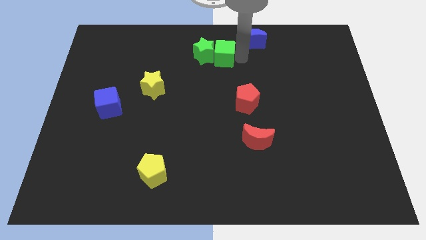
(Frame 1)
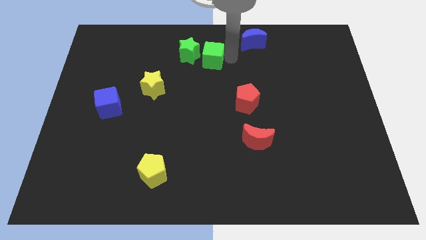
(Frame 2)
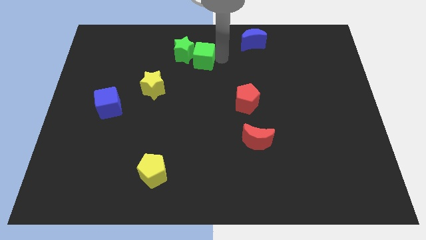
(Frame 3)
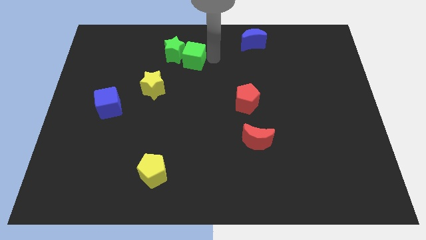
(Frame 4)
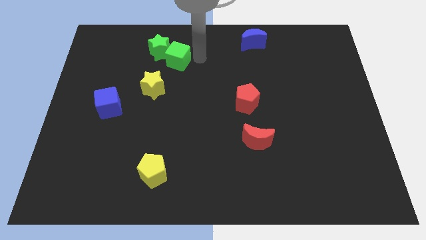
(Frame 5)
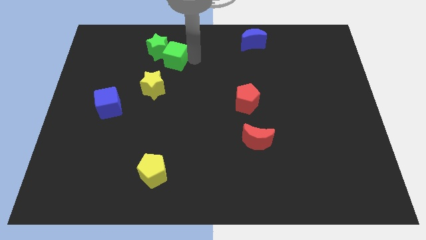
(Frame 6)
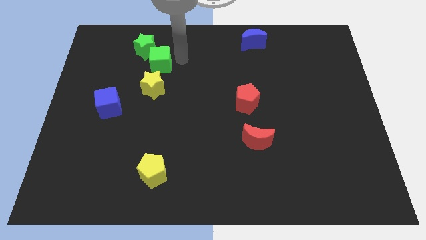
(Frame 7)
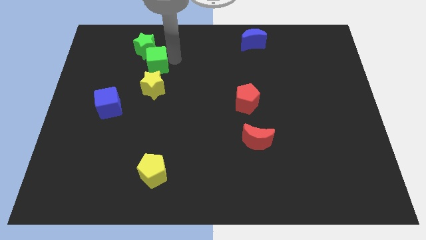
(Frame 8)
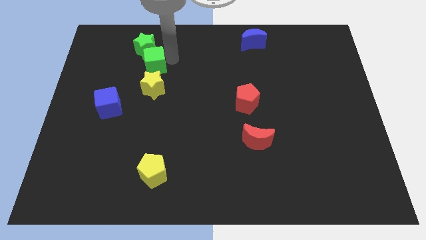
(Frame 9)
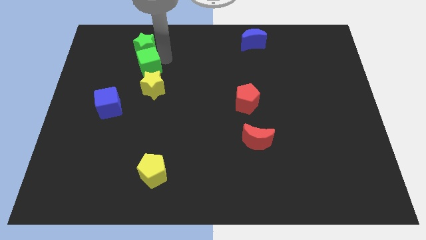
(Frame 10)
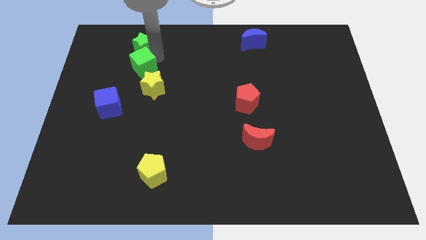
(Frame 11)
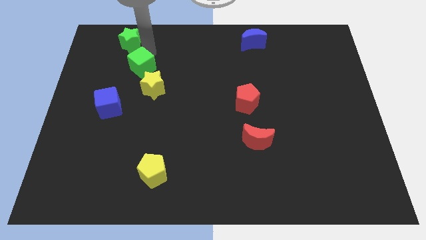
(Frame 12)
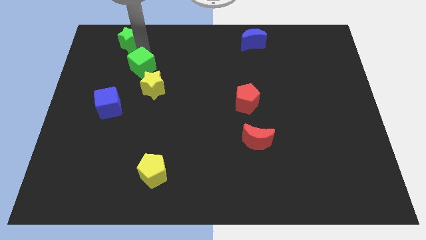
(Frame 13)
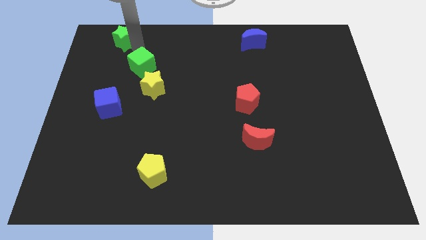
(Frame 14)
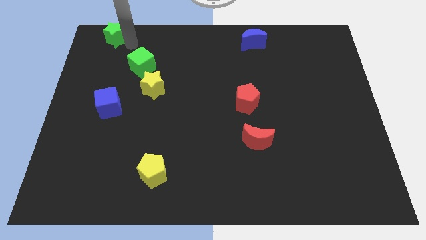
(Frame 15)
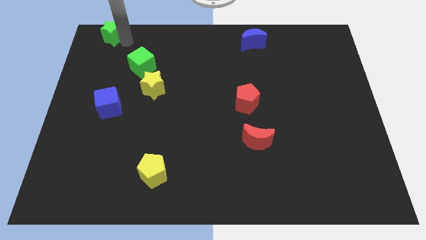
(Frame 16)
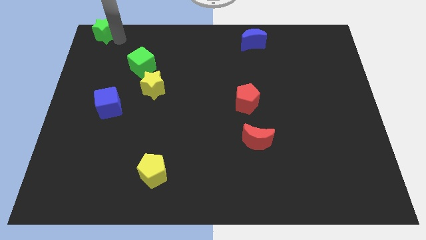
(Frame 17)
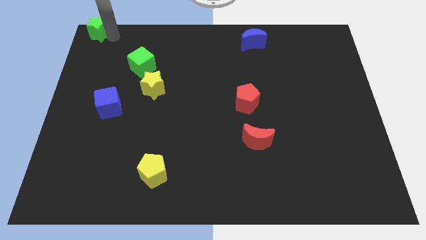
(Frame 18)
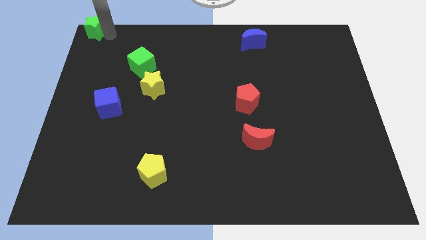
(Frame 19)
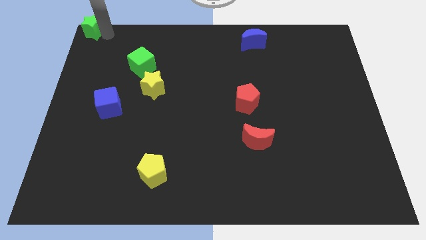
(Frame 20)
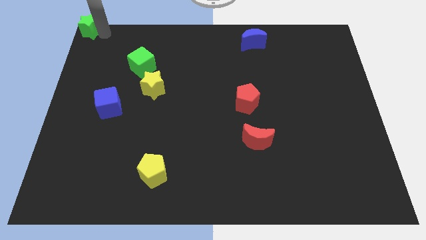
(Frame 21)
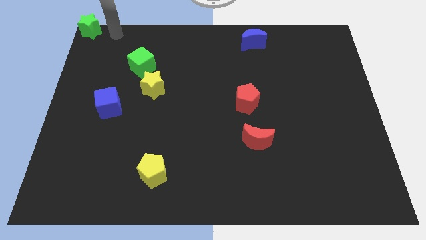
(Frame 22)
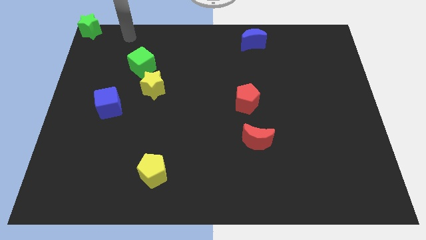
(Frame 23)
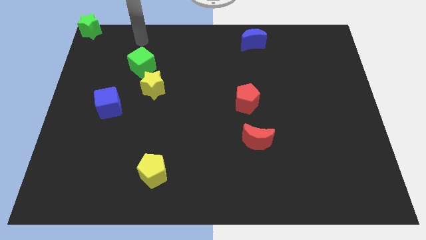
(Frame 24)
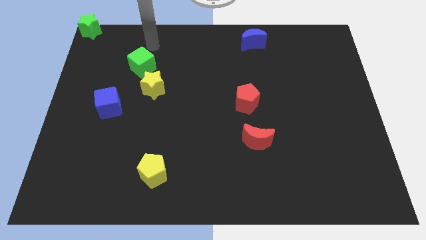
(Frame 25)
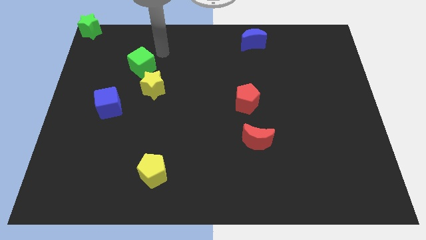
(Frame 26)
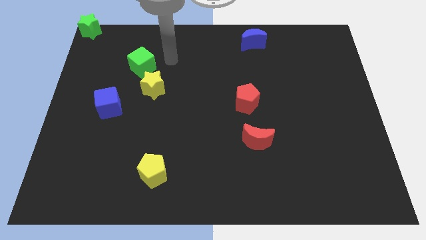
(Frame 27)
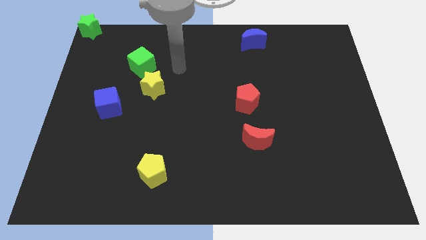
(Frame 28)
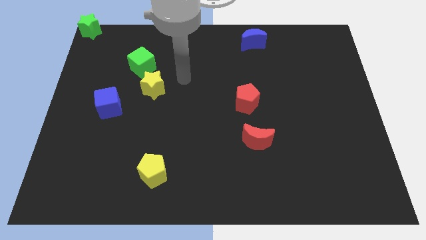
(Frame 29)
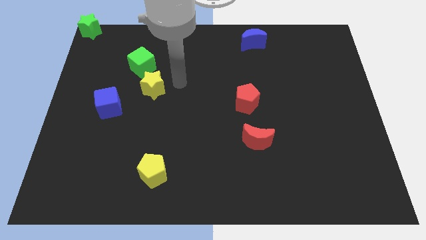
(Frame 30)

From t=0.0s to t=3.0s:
separate green star away from green cube

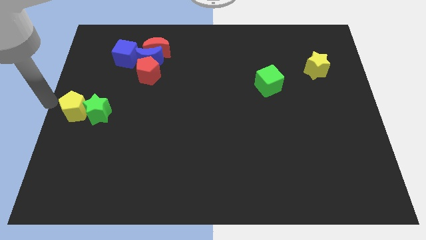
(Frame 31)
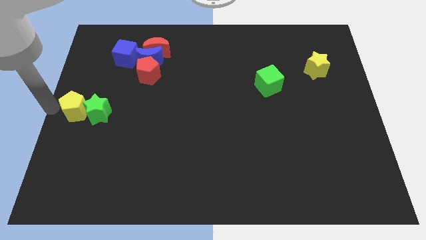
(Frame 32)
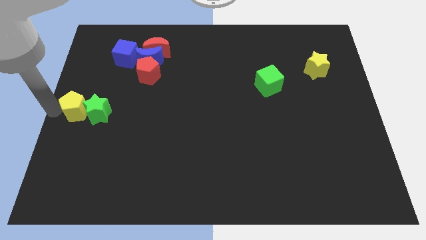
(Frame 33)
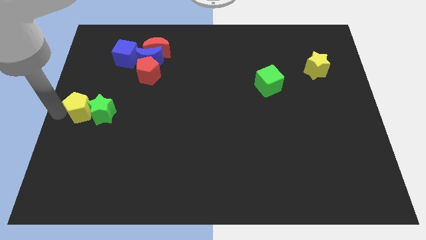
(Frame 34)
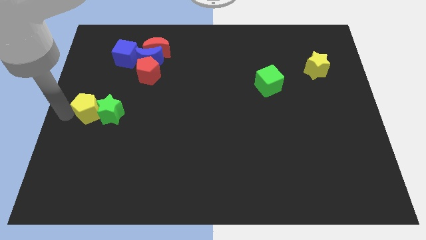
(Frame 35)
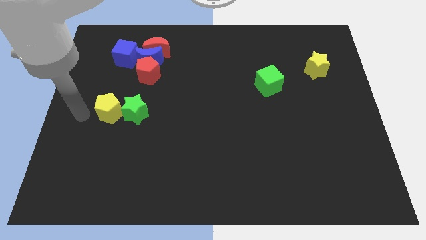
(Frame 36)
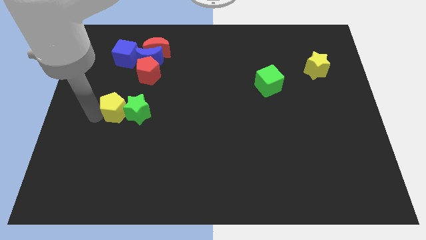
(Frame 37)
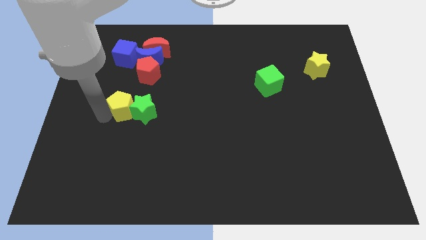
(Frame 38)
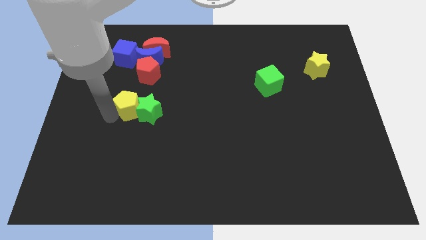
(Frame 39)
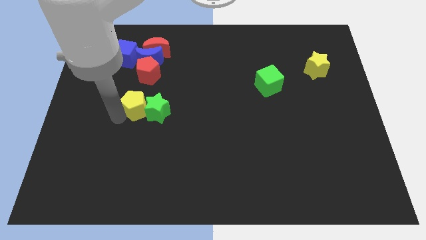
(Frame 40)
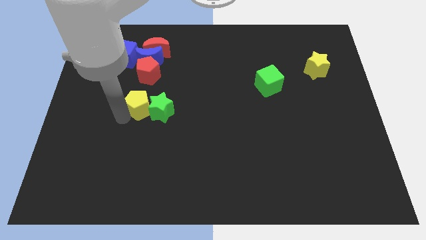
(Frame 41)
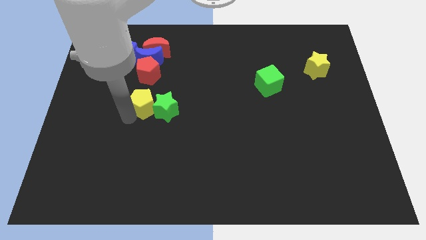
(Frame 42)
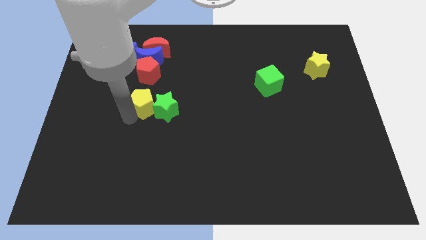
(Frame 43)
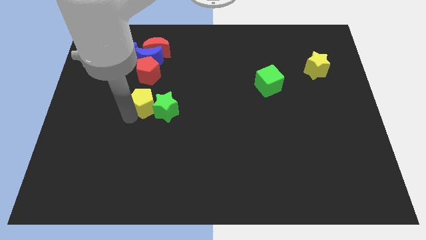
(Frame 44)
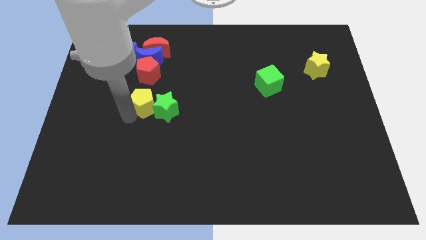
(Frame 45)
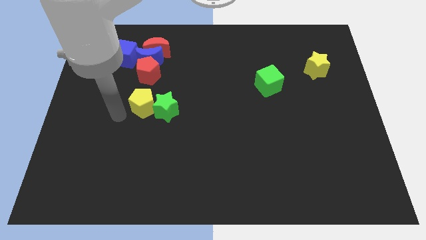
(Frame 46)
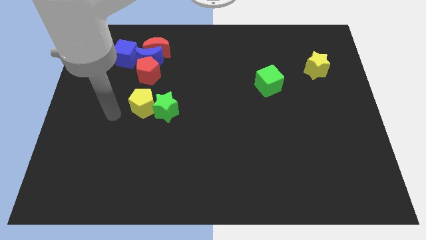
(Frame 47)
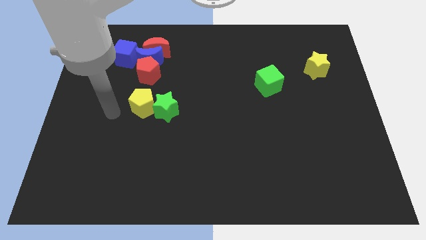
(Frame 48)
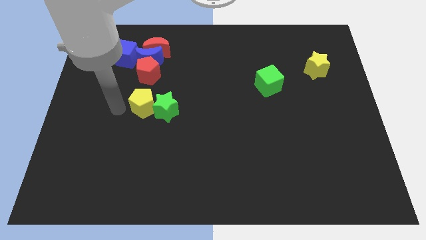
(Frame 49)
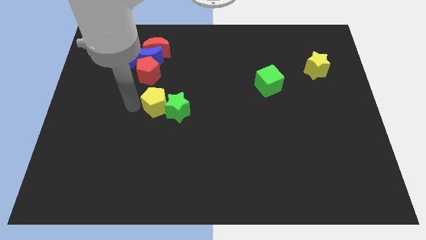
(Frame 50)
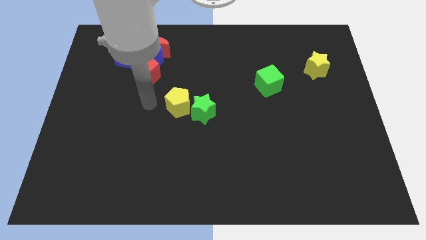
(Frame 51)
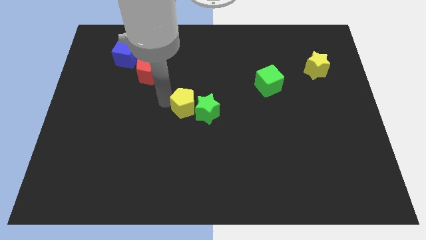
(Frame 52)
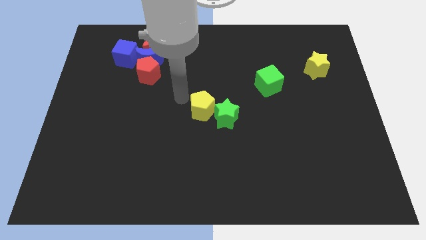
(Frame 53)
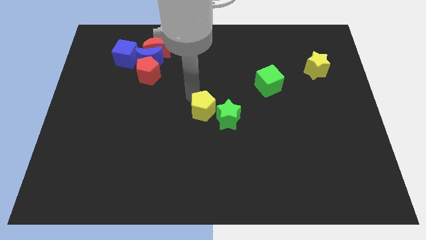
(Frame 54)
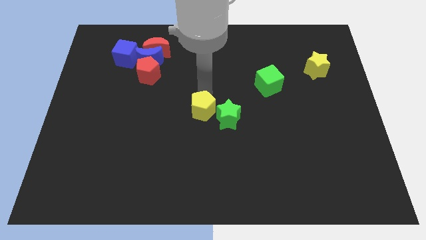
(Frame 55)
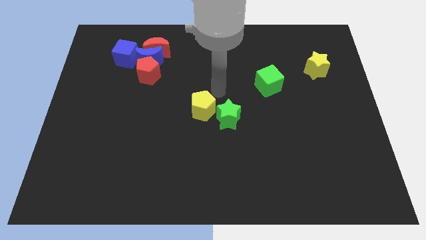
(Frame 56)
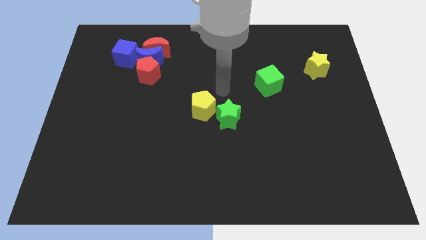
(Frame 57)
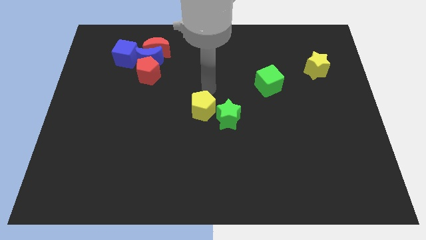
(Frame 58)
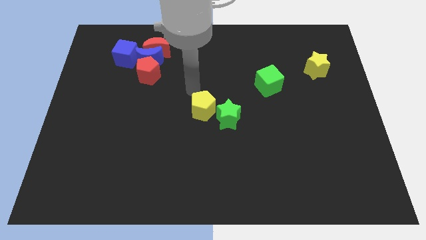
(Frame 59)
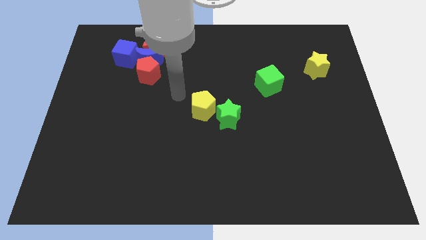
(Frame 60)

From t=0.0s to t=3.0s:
move green star and yellow pentagon at center

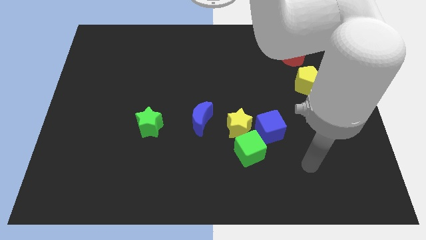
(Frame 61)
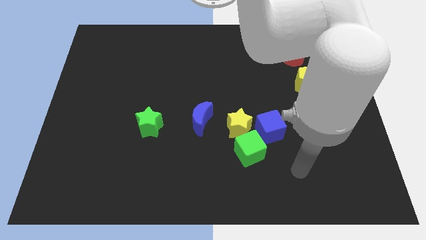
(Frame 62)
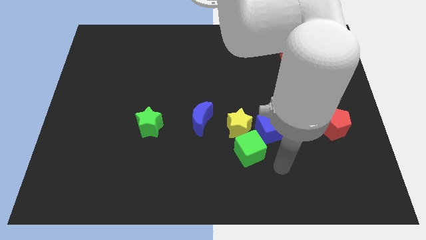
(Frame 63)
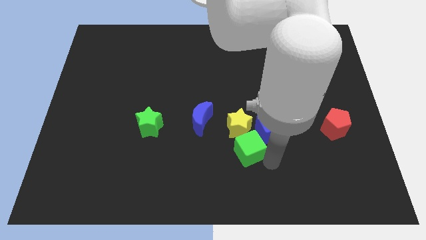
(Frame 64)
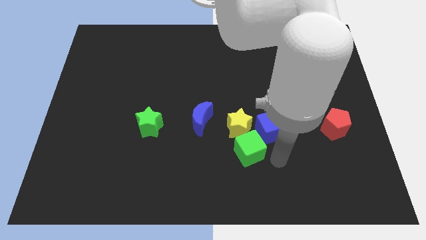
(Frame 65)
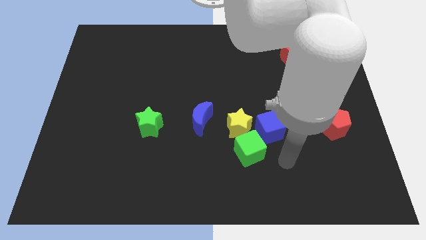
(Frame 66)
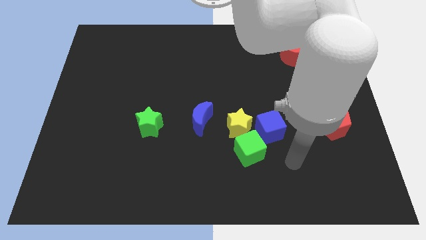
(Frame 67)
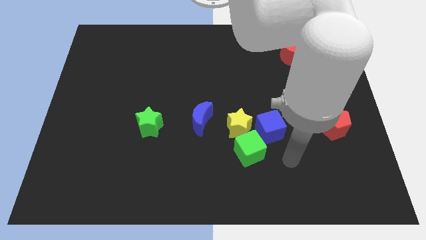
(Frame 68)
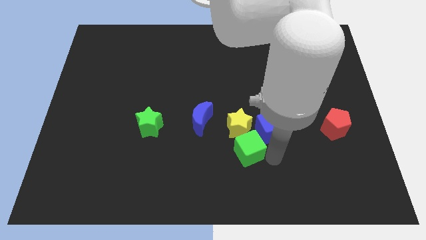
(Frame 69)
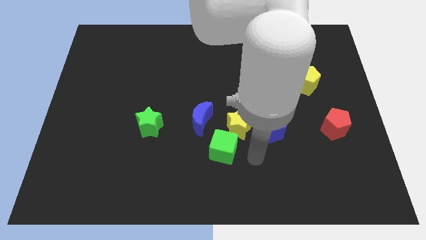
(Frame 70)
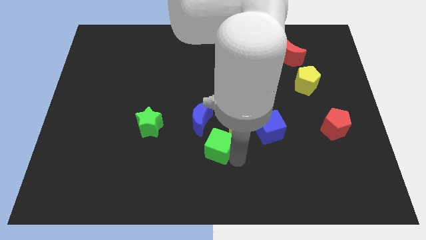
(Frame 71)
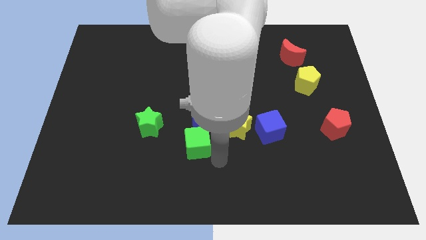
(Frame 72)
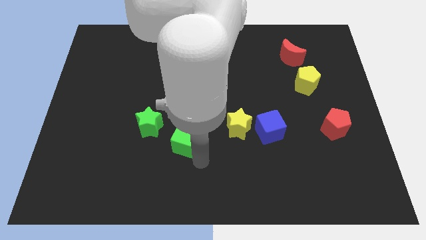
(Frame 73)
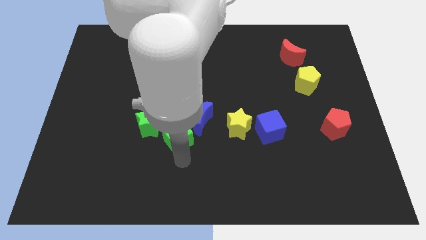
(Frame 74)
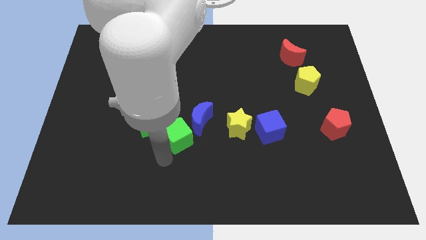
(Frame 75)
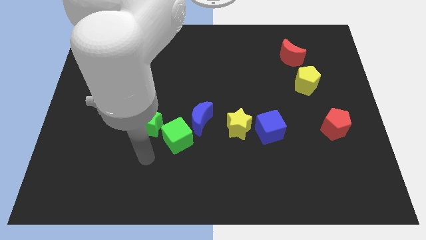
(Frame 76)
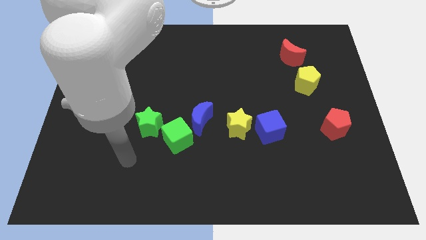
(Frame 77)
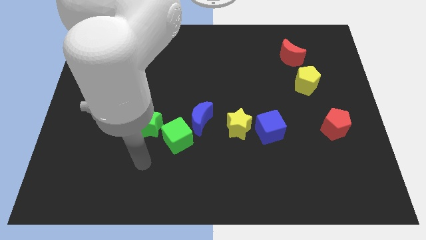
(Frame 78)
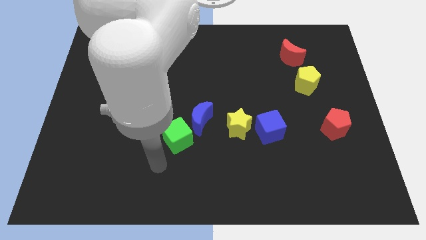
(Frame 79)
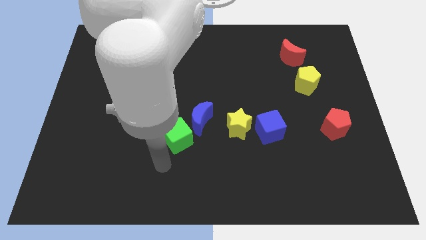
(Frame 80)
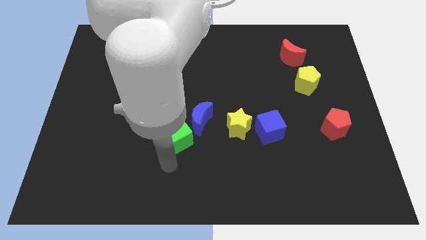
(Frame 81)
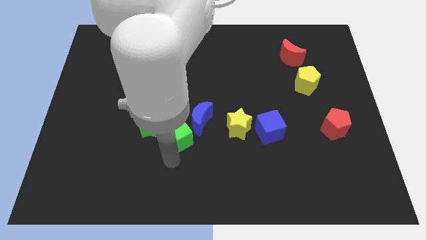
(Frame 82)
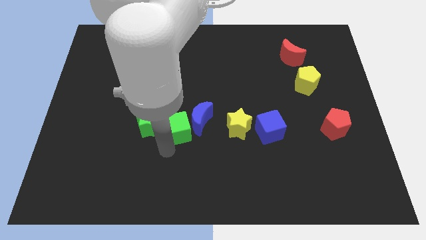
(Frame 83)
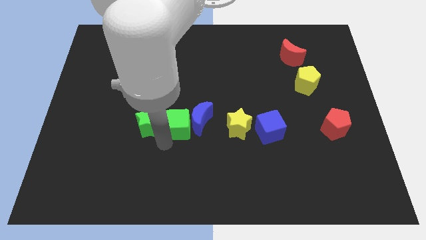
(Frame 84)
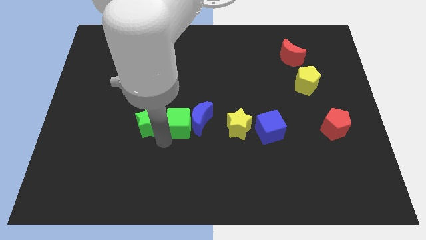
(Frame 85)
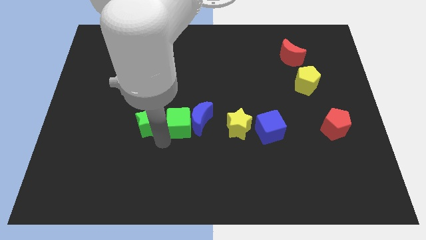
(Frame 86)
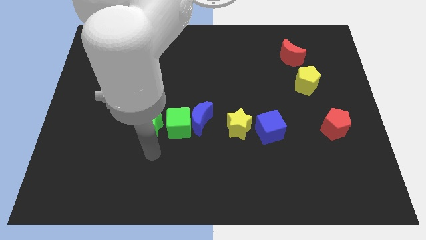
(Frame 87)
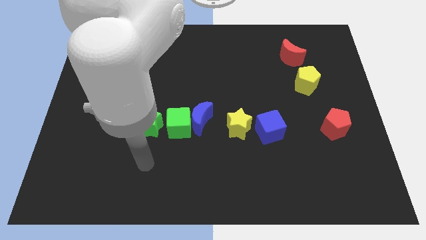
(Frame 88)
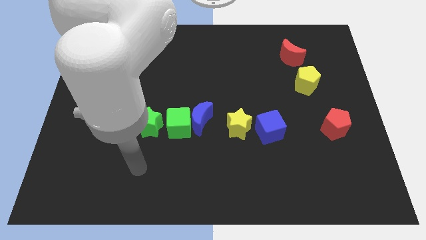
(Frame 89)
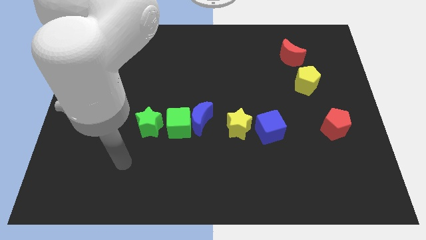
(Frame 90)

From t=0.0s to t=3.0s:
move the green cube left side of the blue moon
